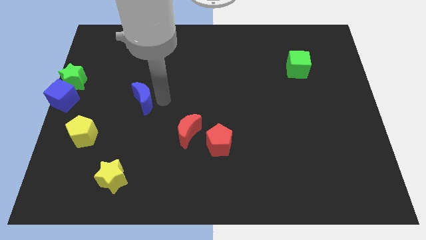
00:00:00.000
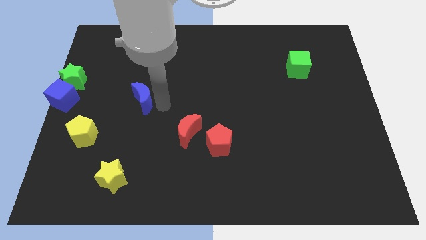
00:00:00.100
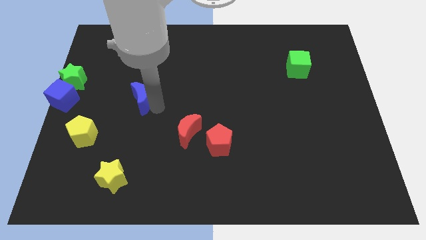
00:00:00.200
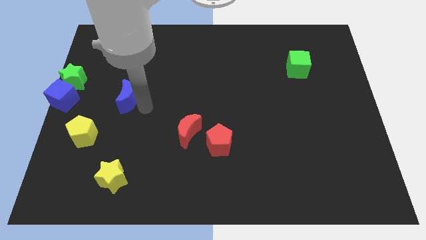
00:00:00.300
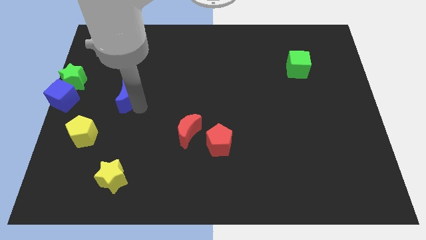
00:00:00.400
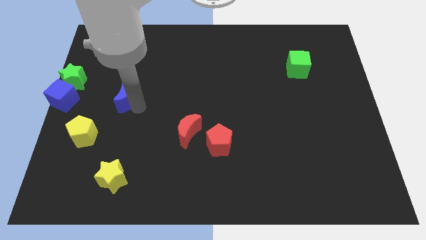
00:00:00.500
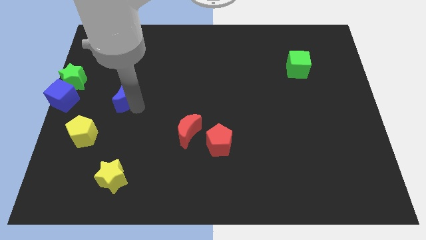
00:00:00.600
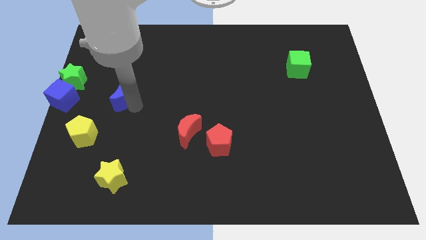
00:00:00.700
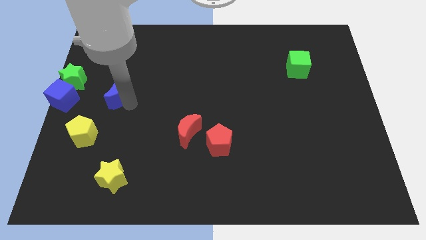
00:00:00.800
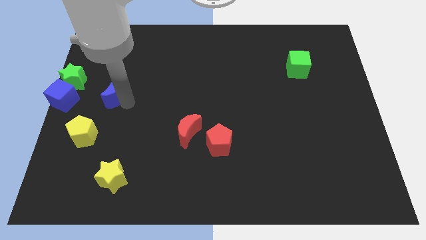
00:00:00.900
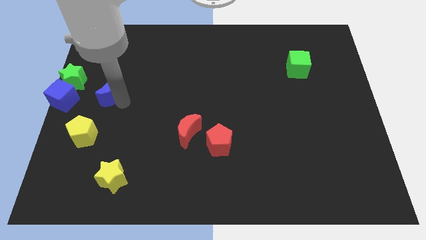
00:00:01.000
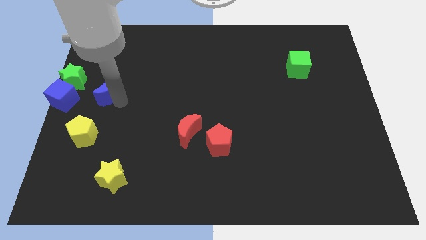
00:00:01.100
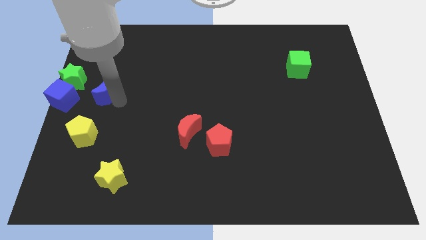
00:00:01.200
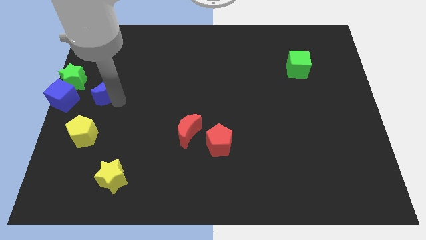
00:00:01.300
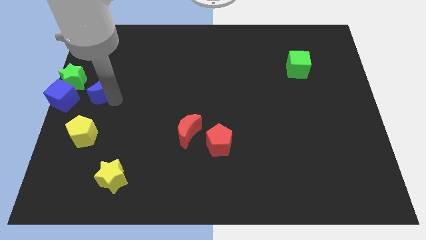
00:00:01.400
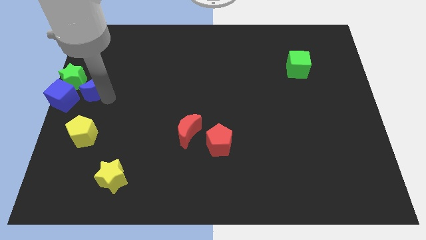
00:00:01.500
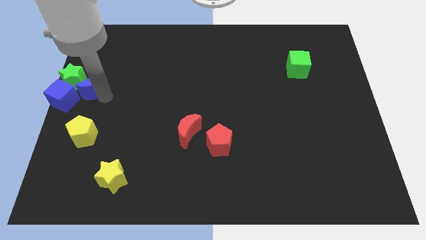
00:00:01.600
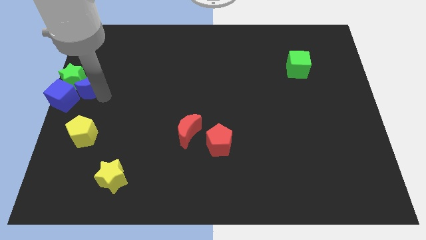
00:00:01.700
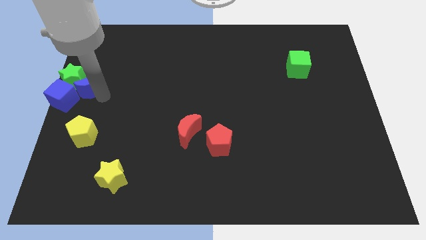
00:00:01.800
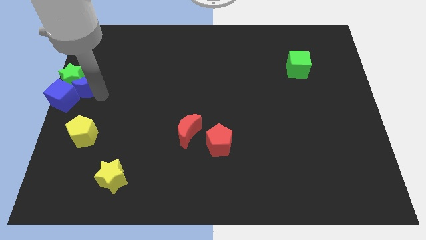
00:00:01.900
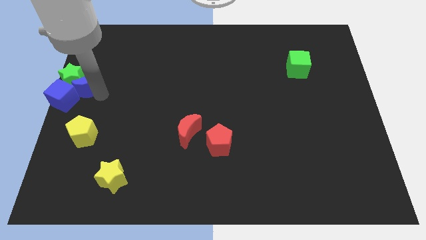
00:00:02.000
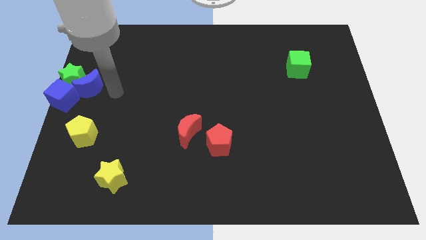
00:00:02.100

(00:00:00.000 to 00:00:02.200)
push the blue moon close to the green star

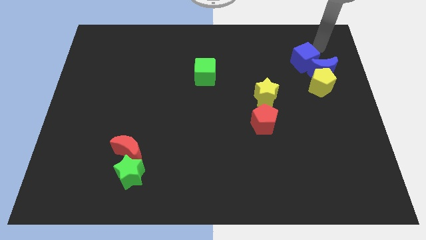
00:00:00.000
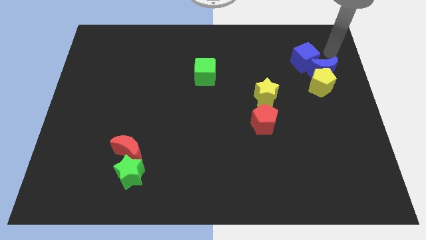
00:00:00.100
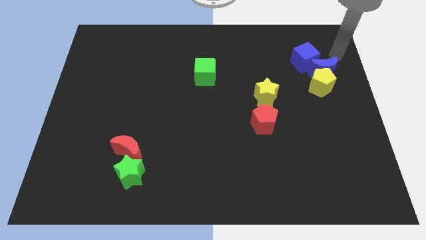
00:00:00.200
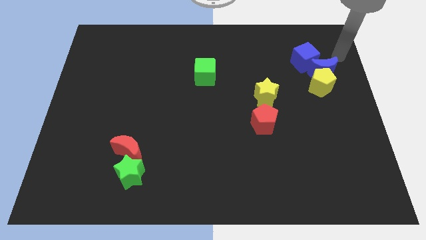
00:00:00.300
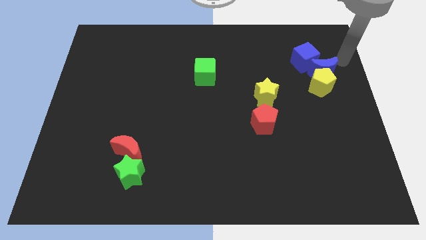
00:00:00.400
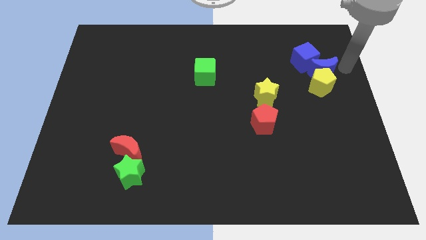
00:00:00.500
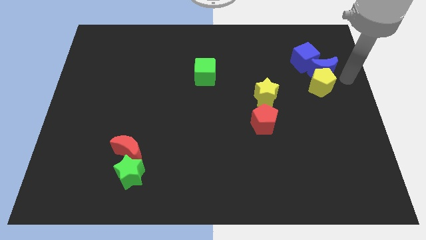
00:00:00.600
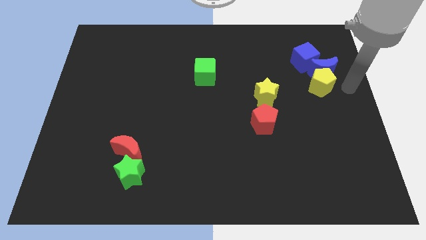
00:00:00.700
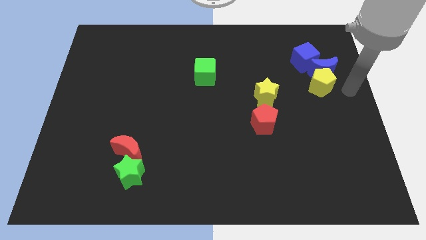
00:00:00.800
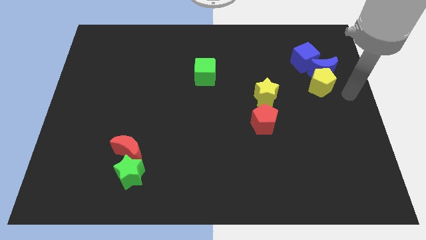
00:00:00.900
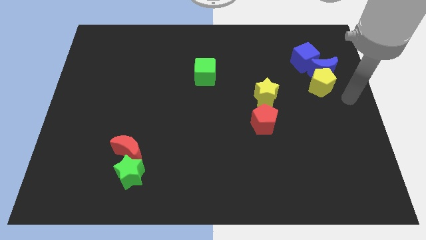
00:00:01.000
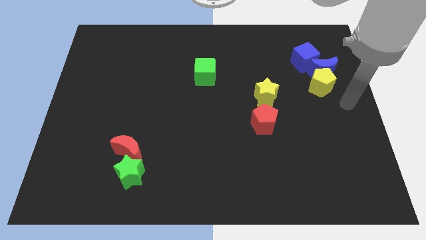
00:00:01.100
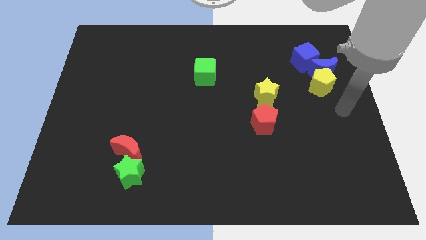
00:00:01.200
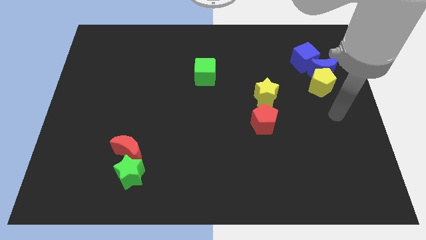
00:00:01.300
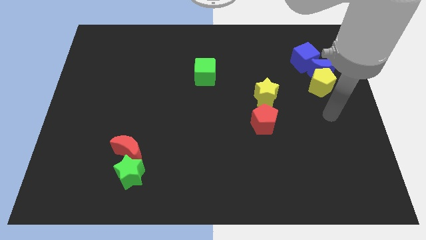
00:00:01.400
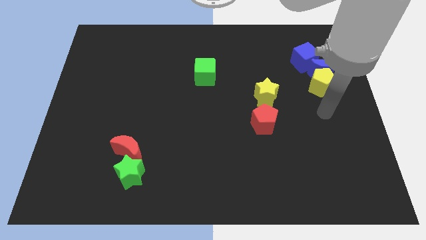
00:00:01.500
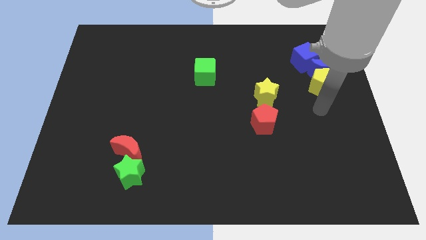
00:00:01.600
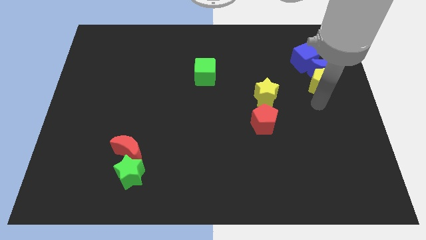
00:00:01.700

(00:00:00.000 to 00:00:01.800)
move the arm towards below yellow pentagon

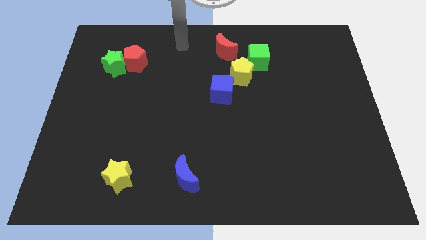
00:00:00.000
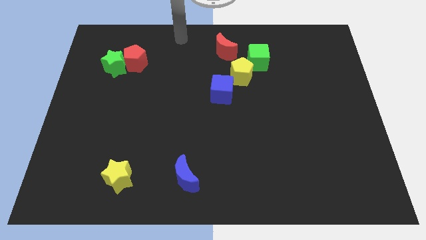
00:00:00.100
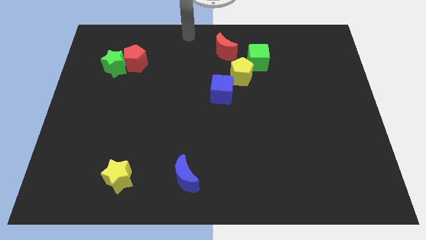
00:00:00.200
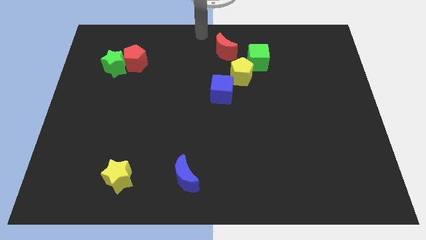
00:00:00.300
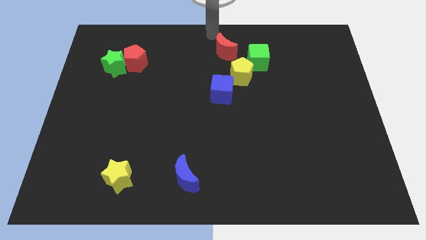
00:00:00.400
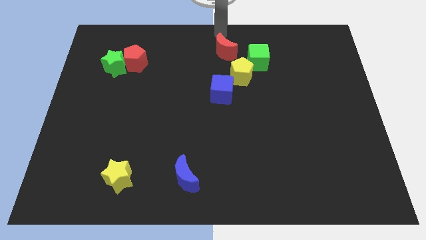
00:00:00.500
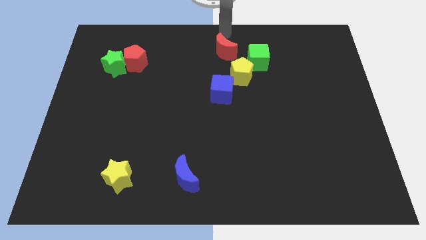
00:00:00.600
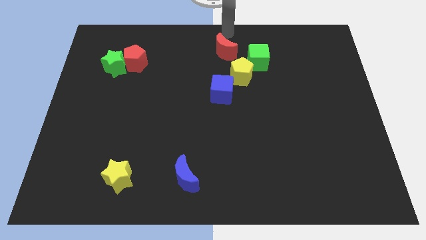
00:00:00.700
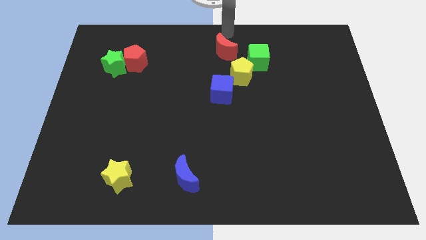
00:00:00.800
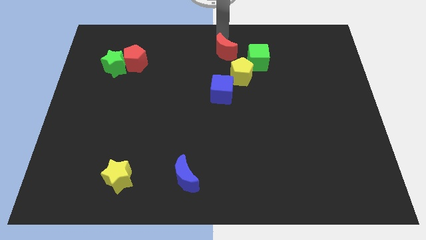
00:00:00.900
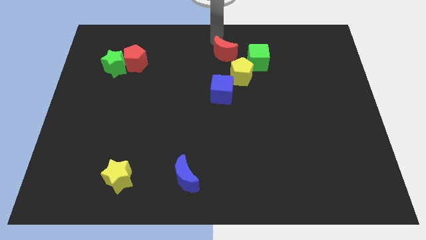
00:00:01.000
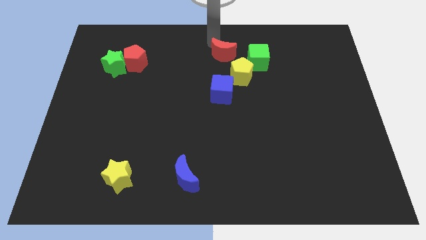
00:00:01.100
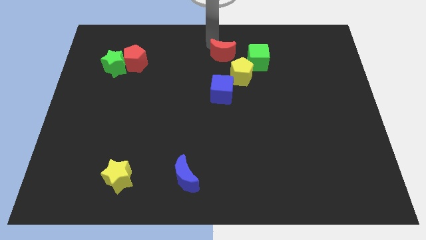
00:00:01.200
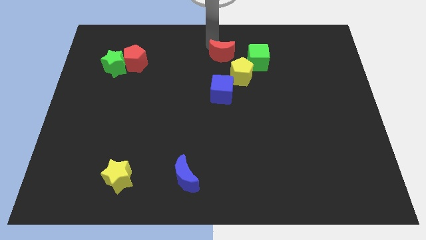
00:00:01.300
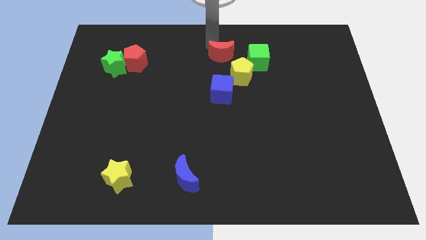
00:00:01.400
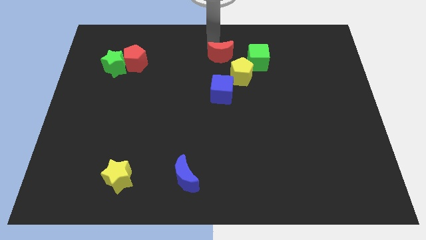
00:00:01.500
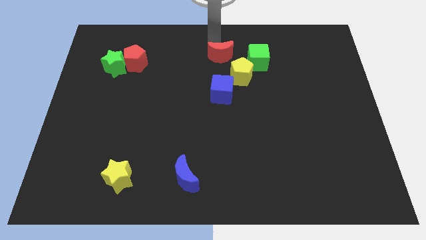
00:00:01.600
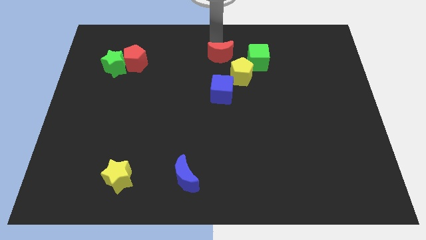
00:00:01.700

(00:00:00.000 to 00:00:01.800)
place red crescent in the proper position

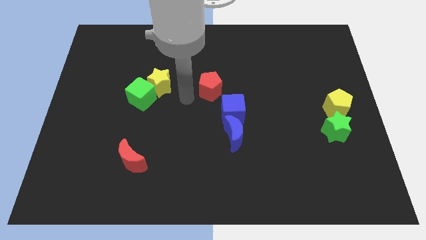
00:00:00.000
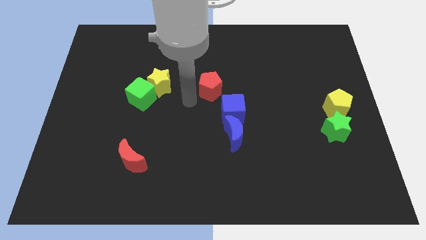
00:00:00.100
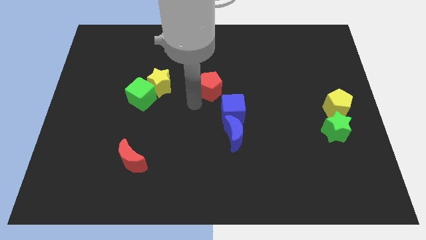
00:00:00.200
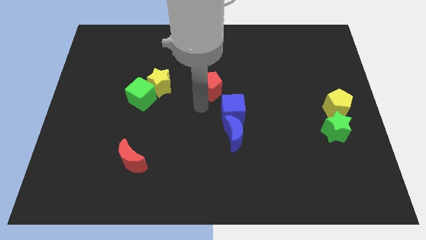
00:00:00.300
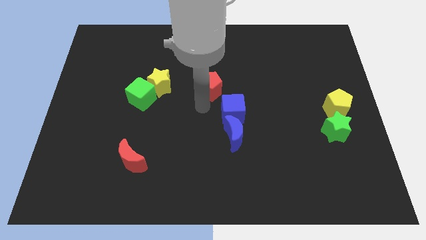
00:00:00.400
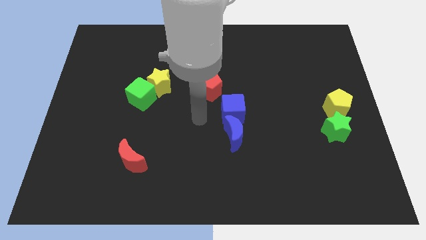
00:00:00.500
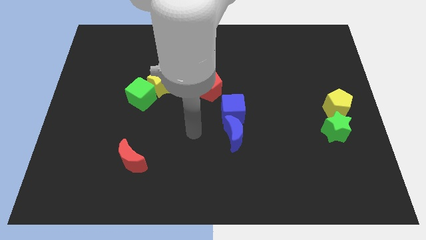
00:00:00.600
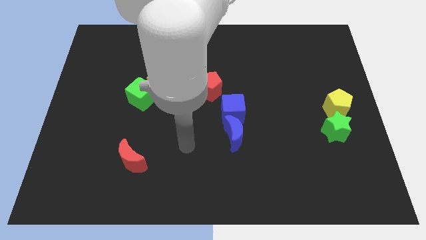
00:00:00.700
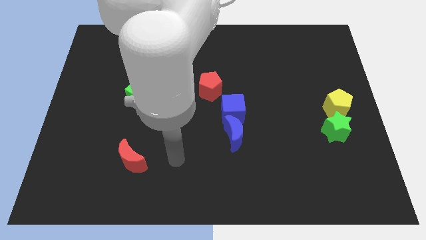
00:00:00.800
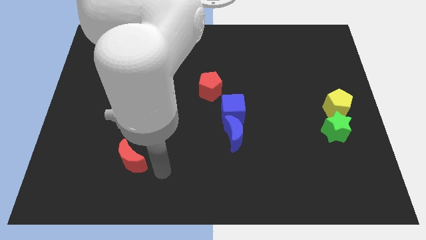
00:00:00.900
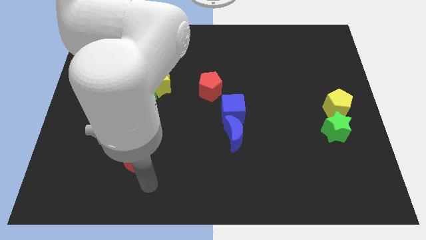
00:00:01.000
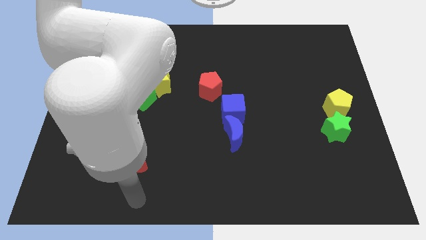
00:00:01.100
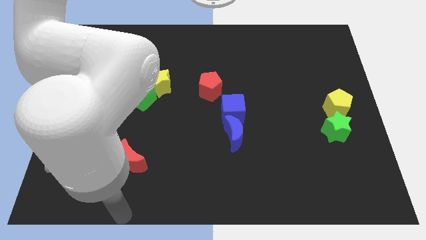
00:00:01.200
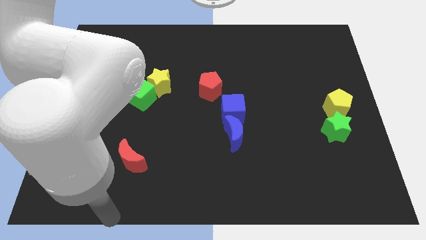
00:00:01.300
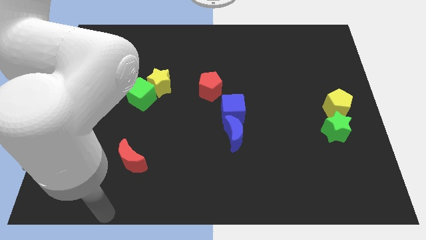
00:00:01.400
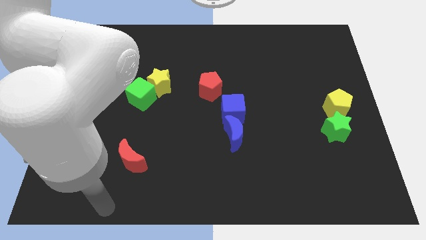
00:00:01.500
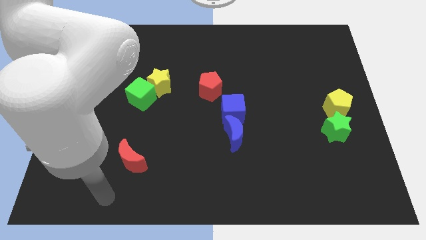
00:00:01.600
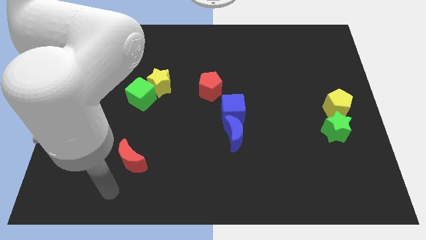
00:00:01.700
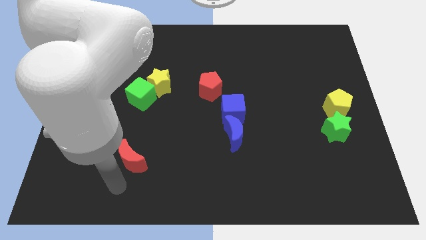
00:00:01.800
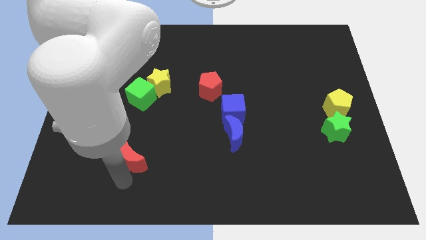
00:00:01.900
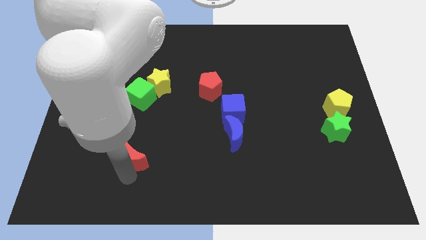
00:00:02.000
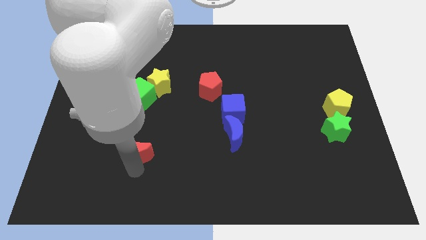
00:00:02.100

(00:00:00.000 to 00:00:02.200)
point your arm below red moon

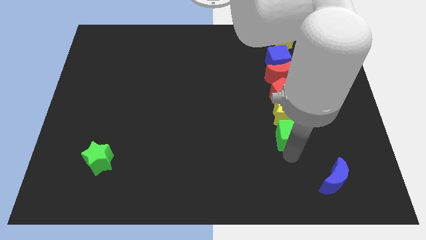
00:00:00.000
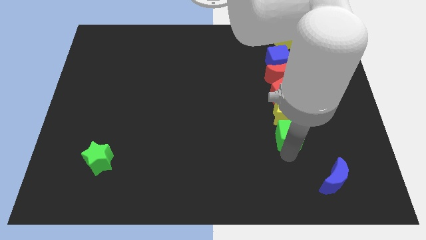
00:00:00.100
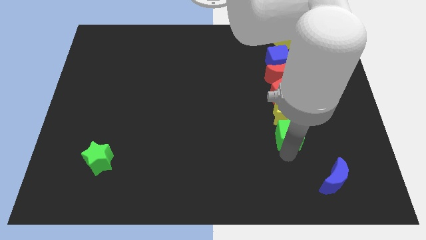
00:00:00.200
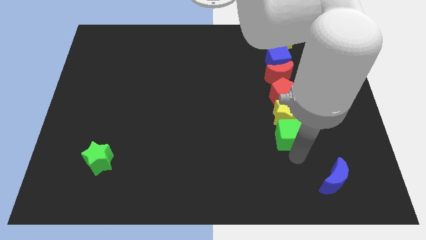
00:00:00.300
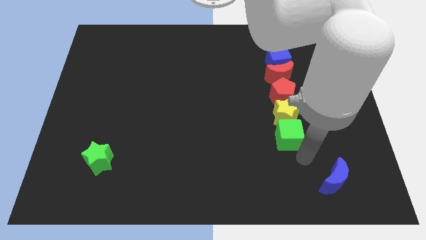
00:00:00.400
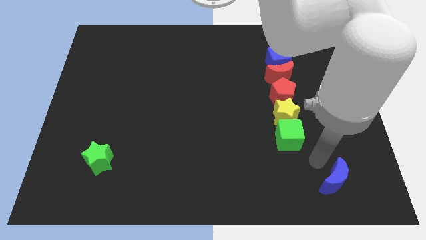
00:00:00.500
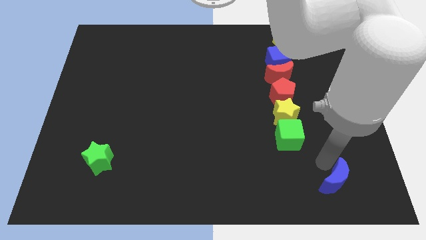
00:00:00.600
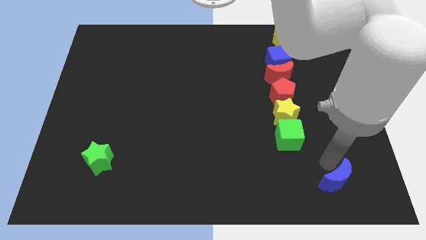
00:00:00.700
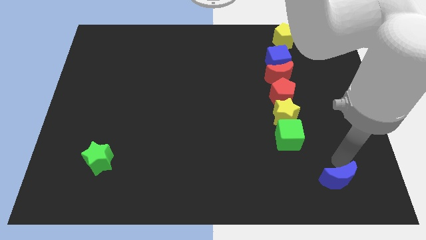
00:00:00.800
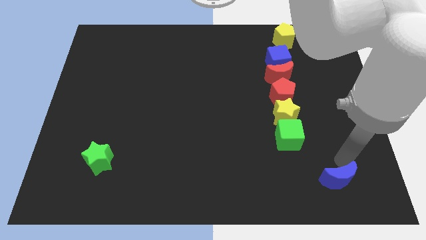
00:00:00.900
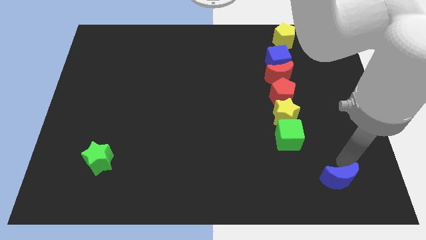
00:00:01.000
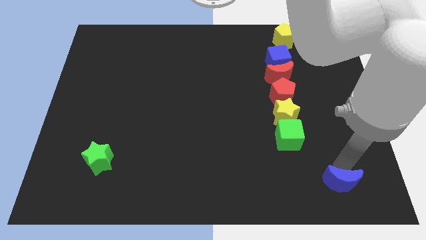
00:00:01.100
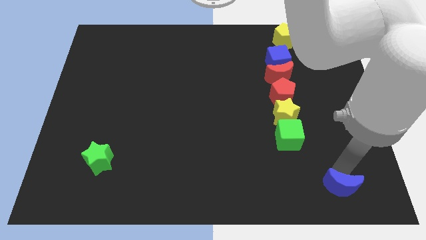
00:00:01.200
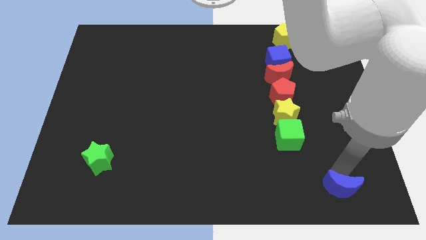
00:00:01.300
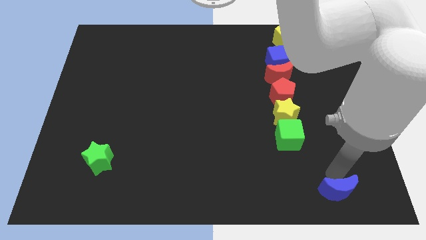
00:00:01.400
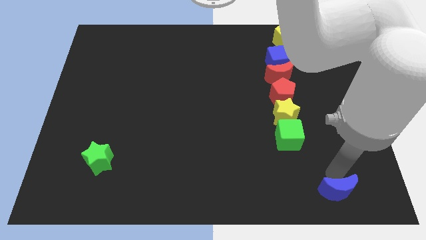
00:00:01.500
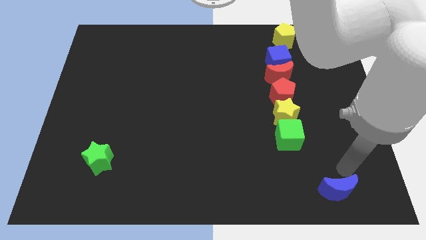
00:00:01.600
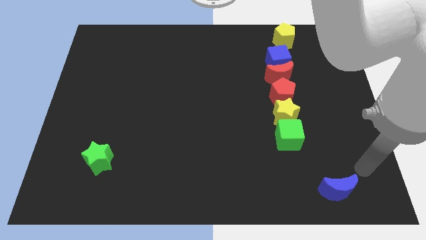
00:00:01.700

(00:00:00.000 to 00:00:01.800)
slightly push the blue moon down
